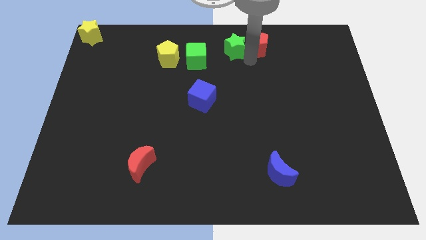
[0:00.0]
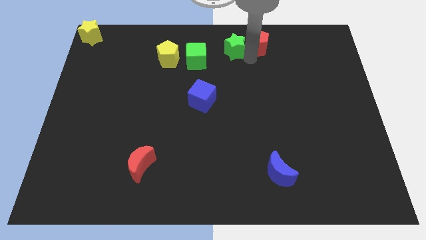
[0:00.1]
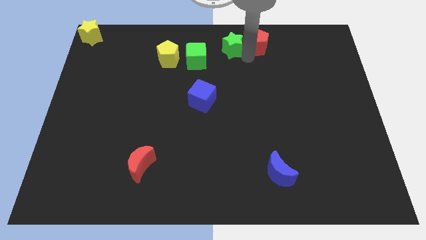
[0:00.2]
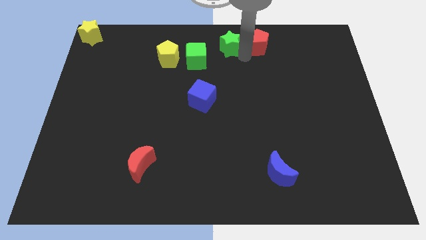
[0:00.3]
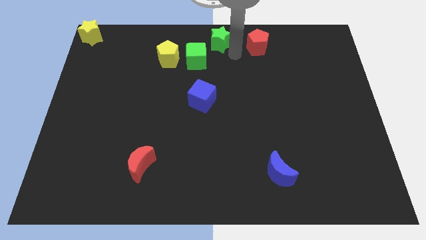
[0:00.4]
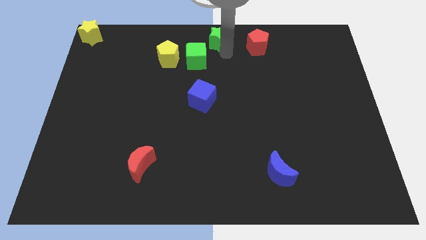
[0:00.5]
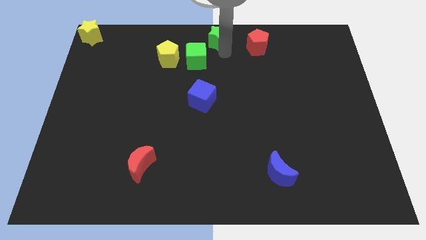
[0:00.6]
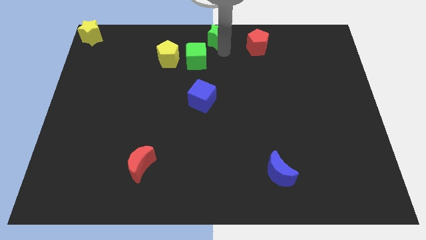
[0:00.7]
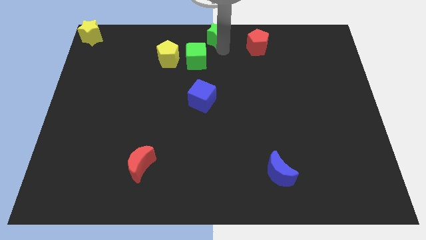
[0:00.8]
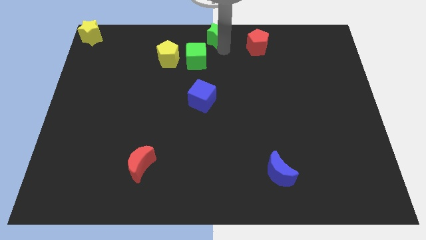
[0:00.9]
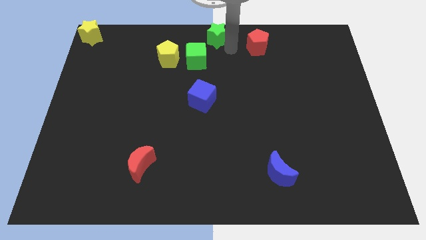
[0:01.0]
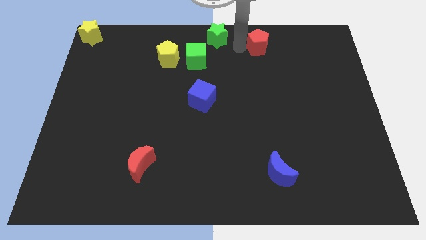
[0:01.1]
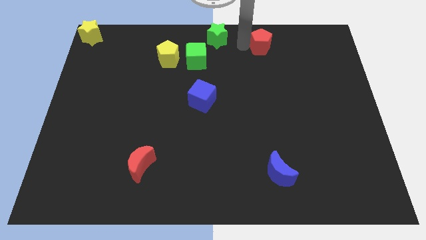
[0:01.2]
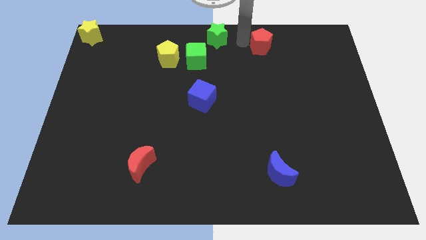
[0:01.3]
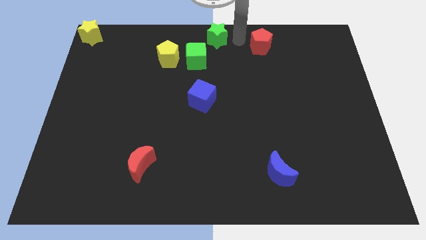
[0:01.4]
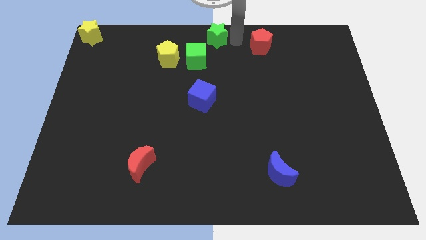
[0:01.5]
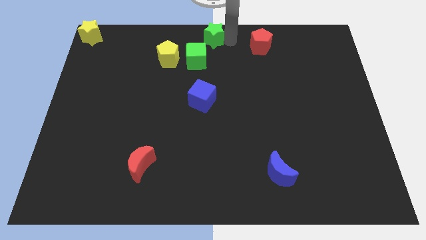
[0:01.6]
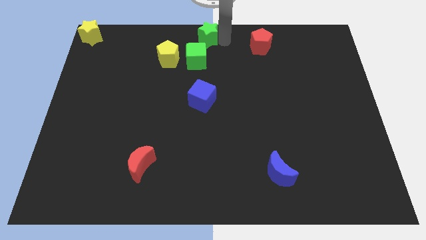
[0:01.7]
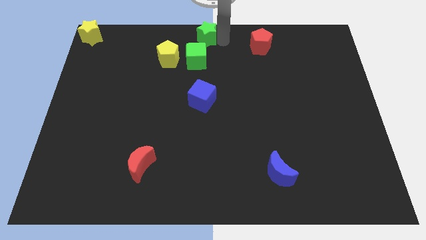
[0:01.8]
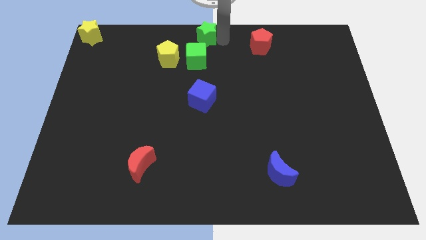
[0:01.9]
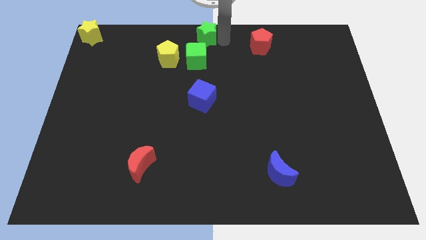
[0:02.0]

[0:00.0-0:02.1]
place the green star above the green cube

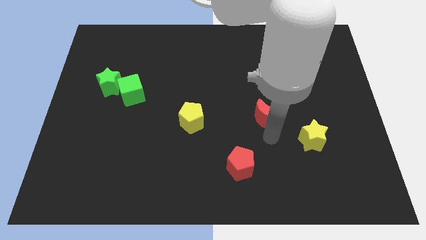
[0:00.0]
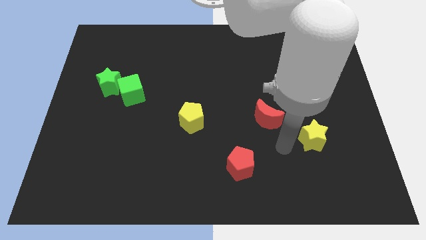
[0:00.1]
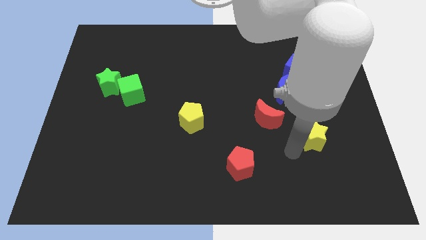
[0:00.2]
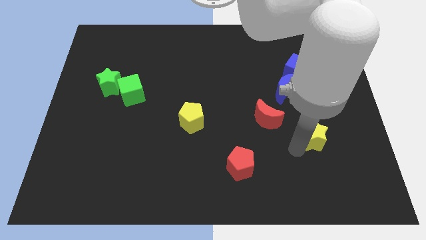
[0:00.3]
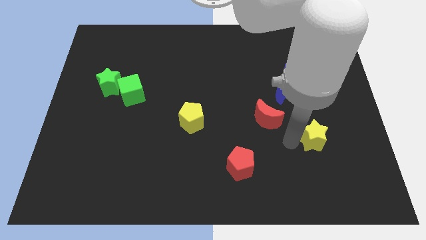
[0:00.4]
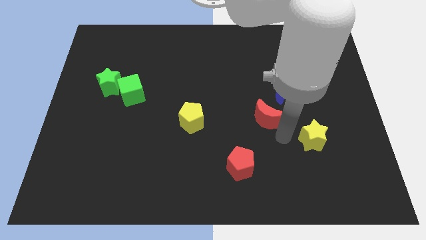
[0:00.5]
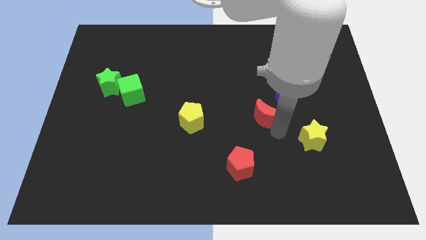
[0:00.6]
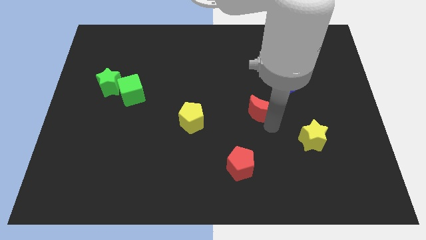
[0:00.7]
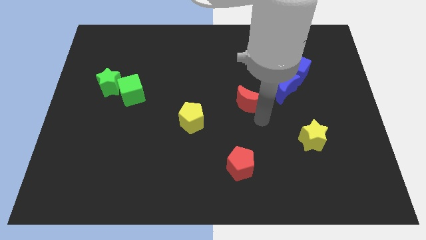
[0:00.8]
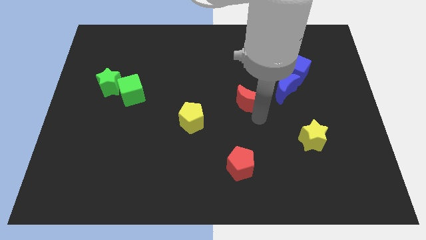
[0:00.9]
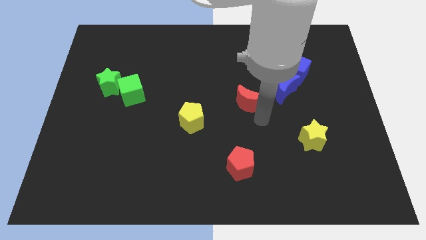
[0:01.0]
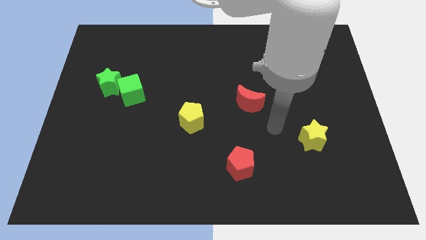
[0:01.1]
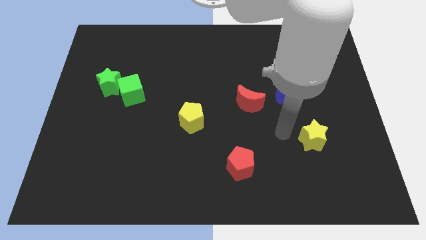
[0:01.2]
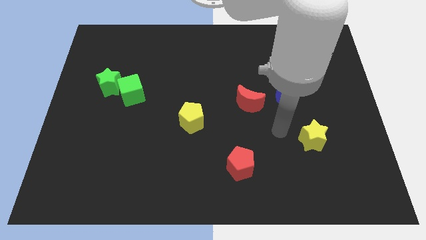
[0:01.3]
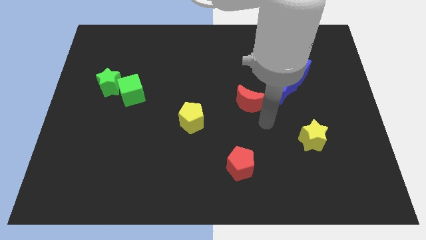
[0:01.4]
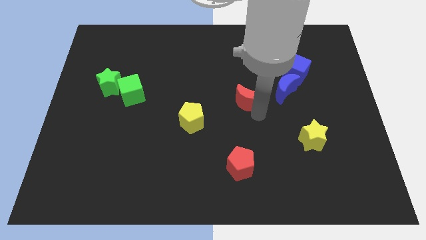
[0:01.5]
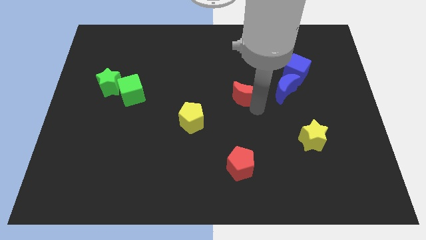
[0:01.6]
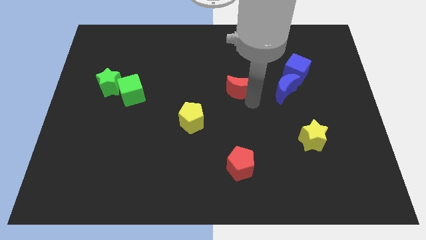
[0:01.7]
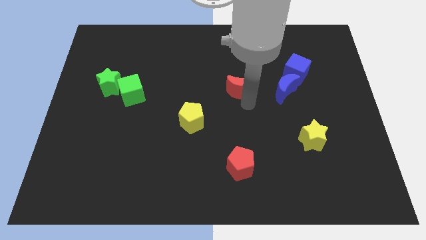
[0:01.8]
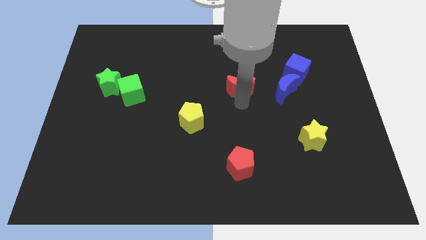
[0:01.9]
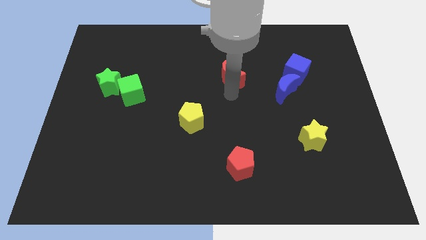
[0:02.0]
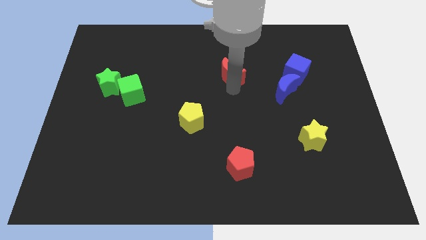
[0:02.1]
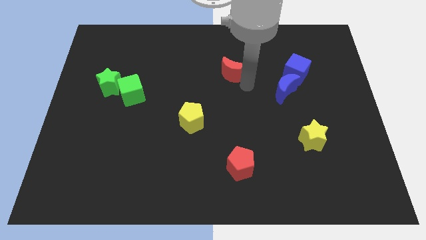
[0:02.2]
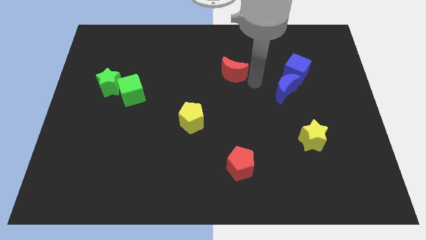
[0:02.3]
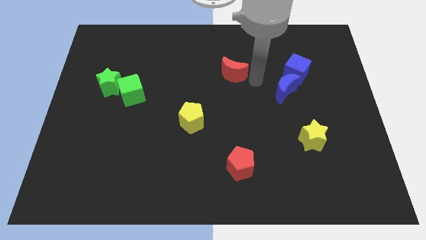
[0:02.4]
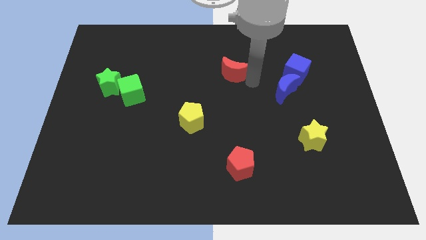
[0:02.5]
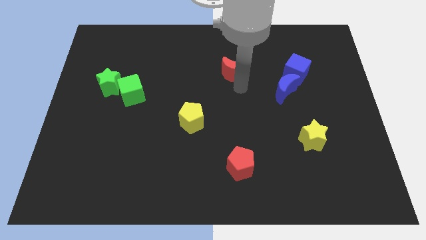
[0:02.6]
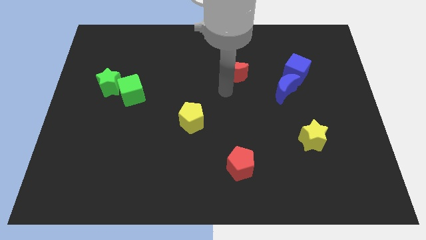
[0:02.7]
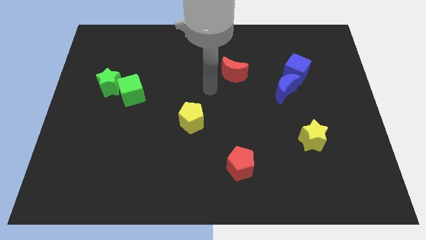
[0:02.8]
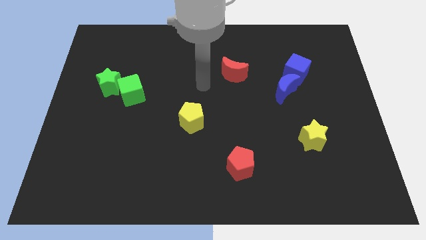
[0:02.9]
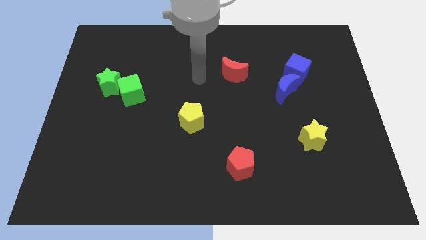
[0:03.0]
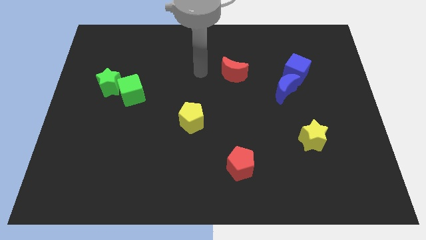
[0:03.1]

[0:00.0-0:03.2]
move red moon to the left of blue cube

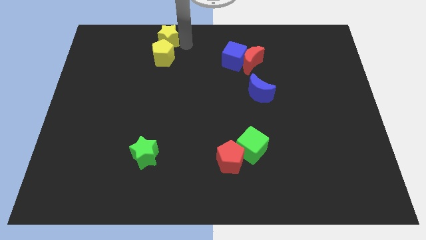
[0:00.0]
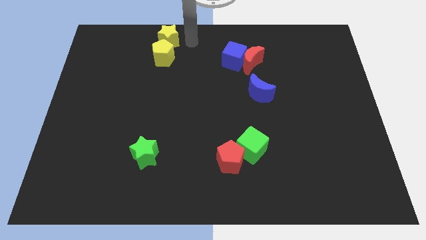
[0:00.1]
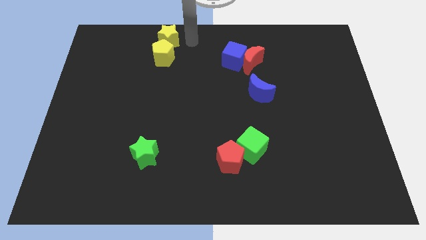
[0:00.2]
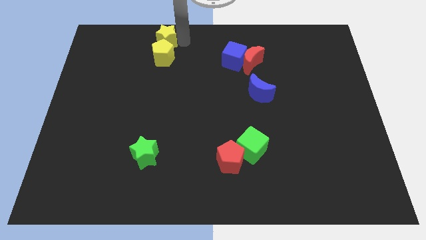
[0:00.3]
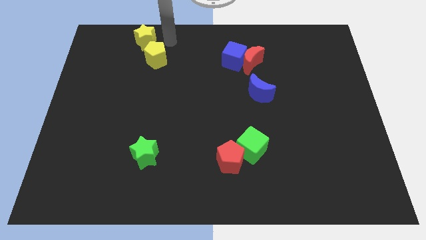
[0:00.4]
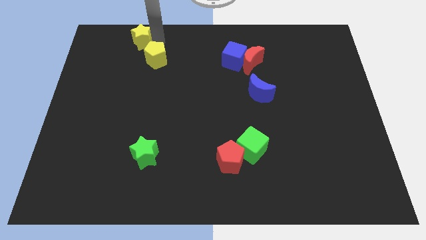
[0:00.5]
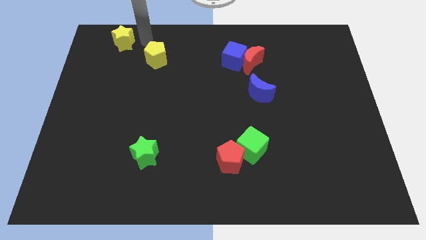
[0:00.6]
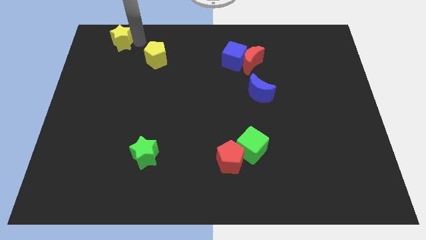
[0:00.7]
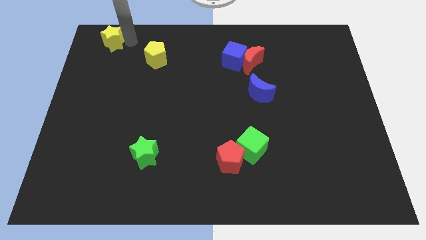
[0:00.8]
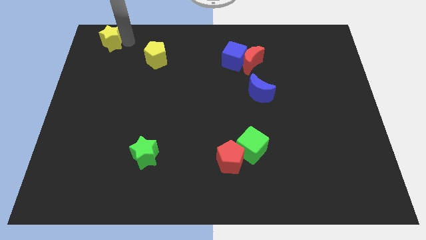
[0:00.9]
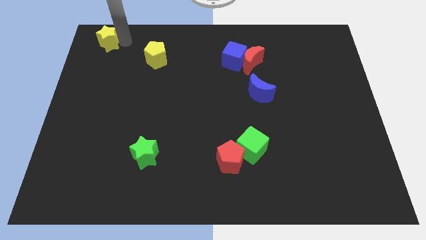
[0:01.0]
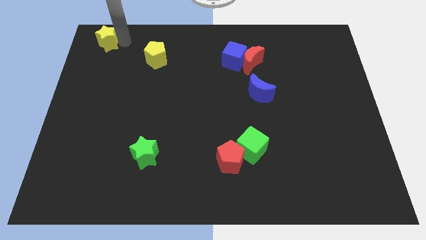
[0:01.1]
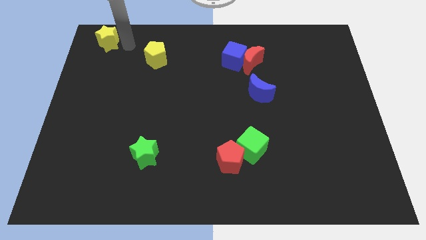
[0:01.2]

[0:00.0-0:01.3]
push the yellow star towards the top right corner of the board

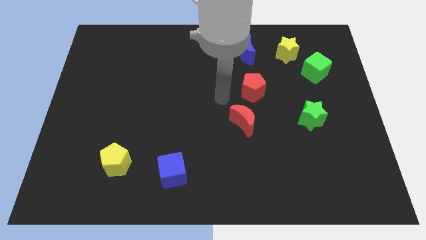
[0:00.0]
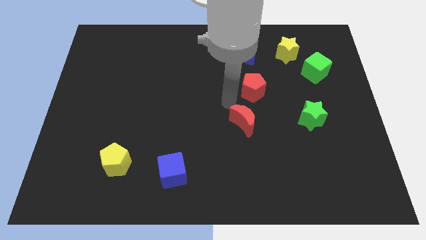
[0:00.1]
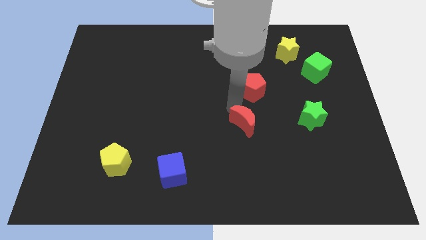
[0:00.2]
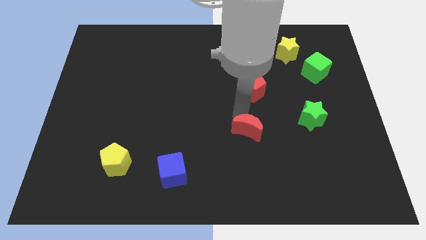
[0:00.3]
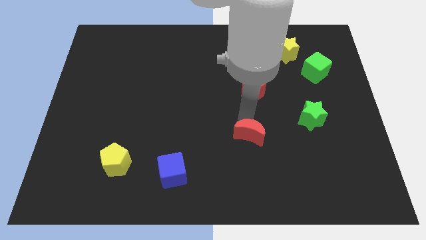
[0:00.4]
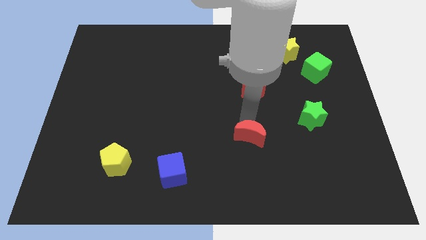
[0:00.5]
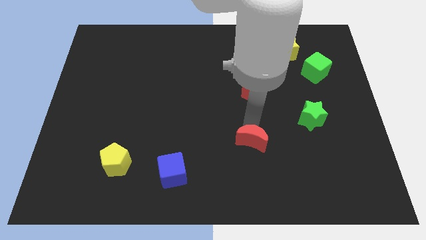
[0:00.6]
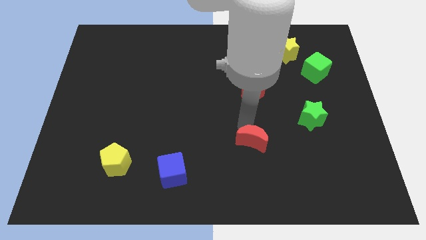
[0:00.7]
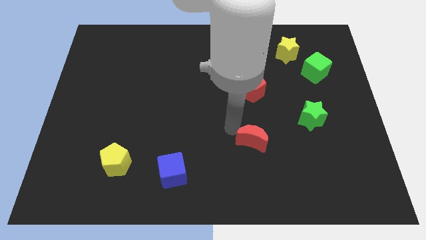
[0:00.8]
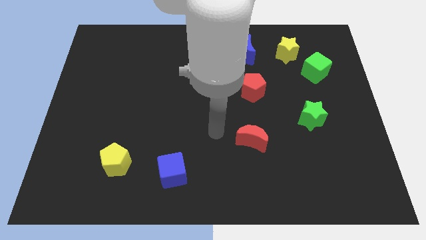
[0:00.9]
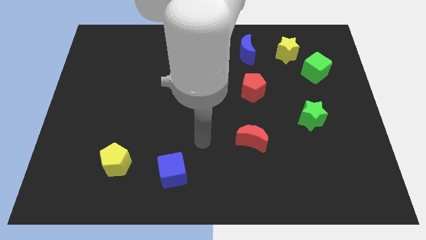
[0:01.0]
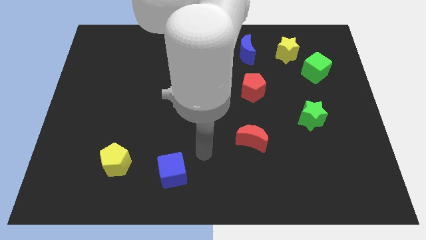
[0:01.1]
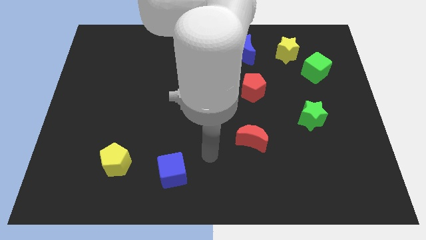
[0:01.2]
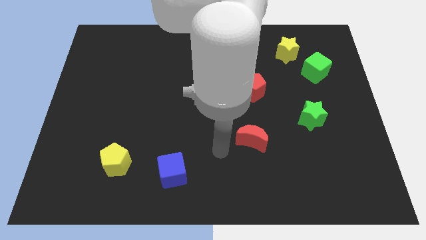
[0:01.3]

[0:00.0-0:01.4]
move the red crescent vertically below the red pentagon

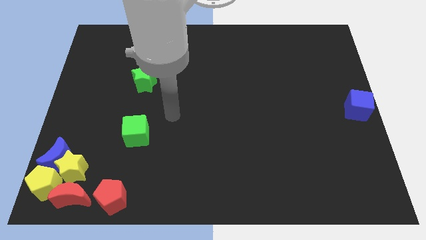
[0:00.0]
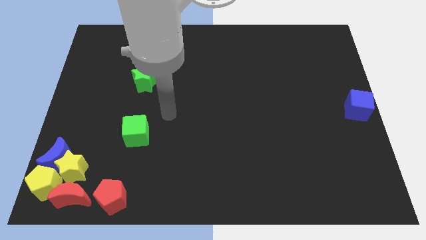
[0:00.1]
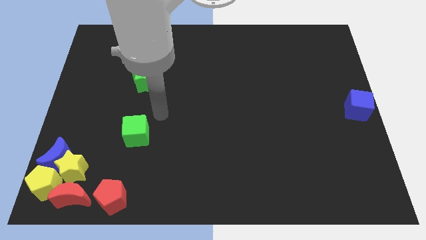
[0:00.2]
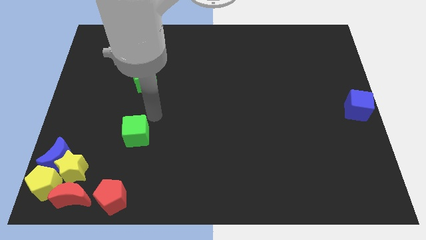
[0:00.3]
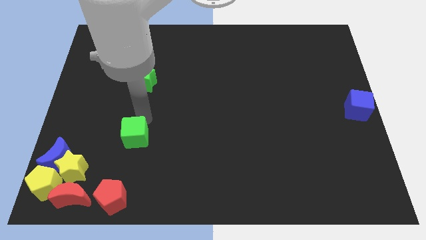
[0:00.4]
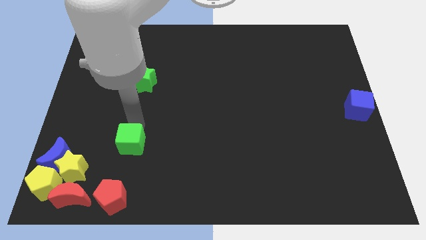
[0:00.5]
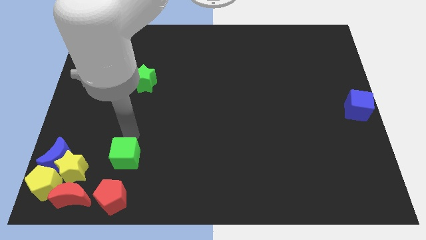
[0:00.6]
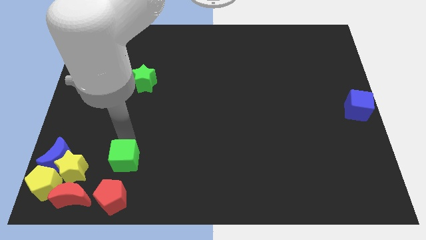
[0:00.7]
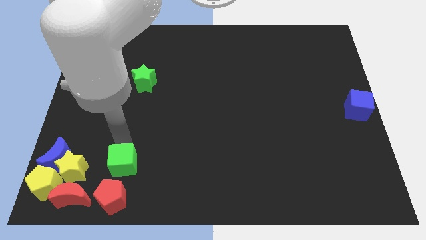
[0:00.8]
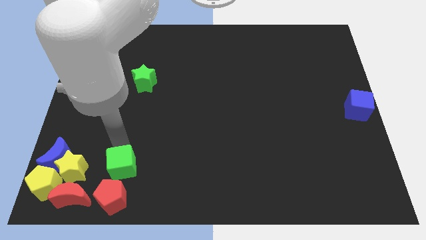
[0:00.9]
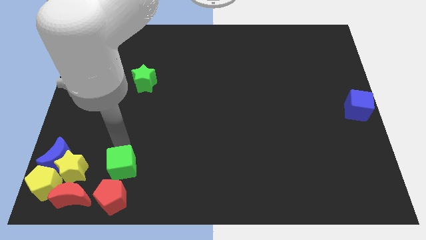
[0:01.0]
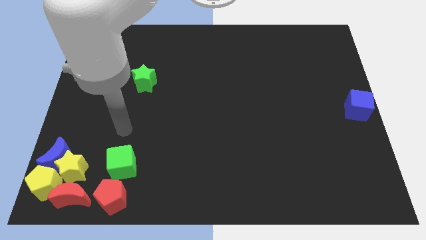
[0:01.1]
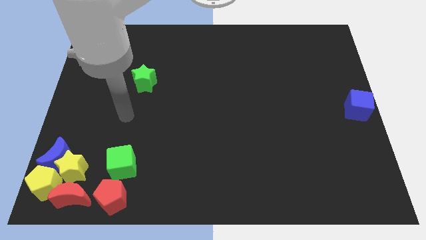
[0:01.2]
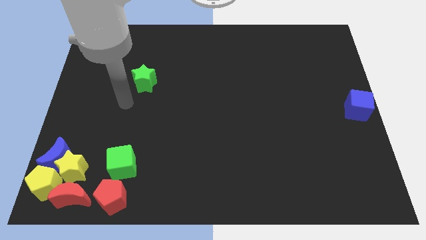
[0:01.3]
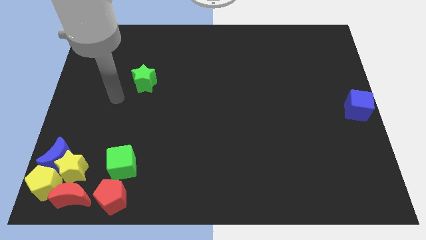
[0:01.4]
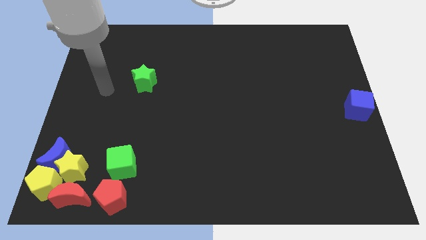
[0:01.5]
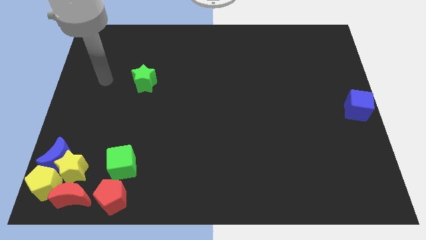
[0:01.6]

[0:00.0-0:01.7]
push the green cube towards the red pentagon
